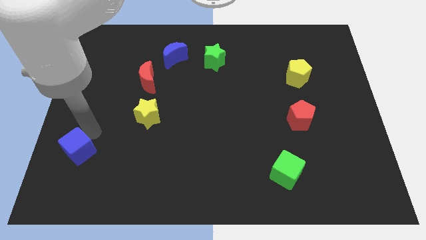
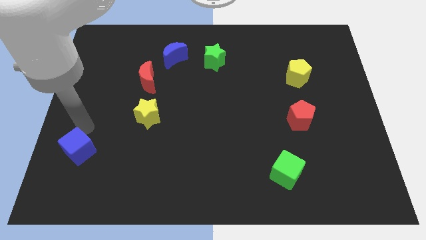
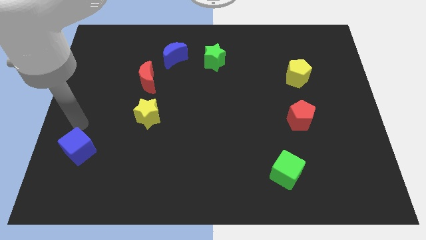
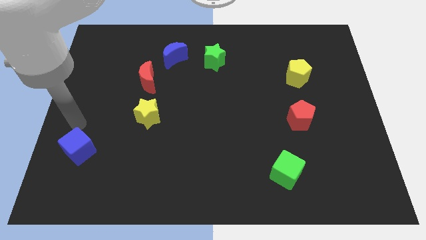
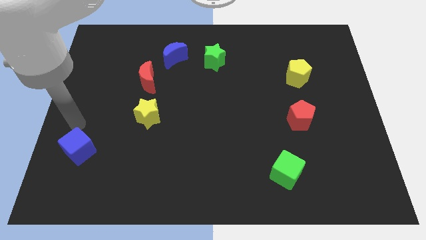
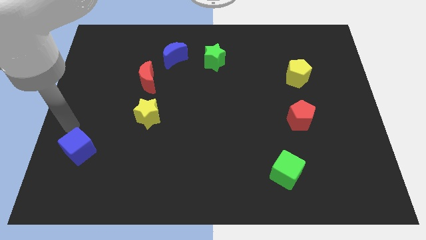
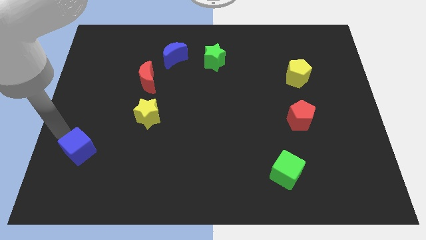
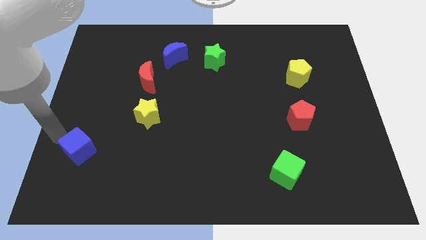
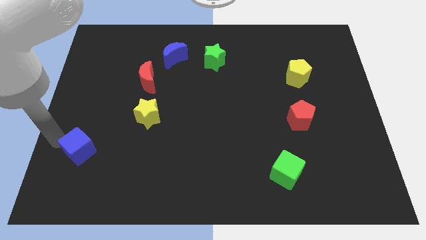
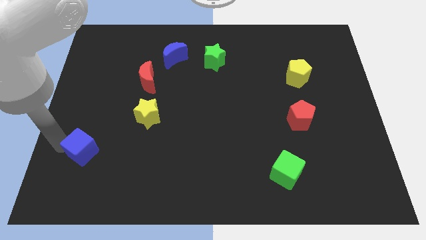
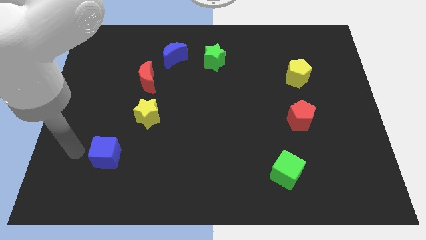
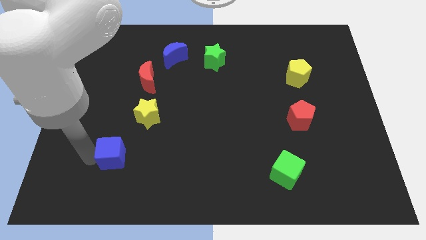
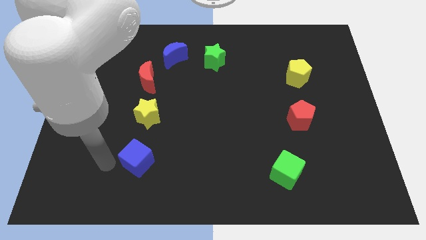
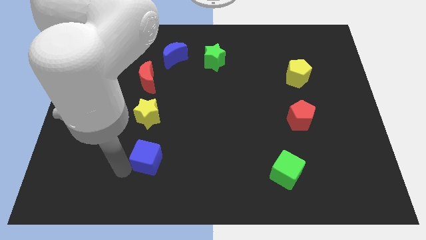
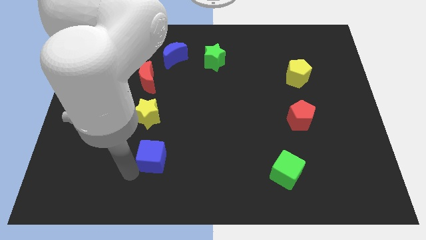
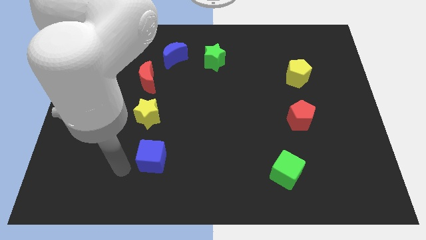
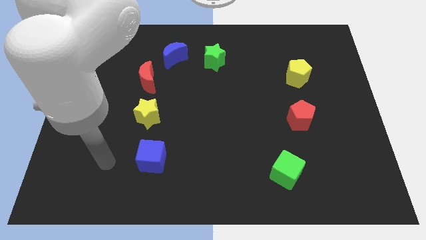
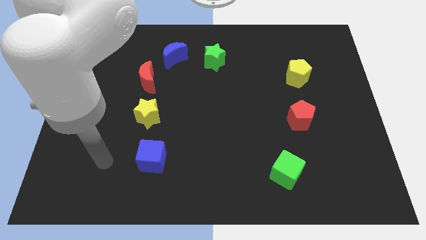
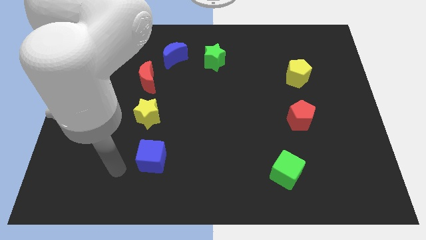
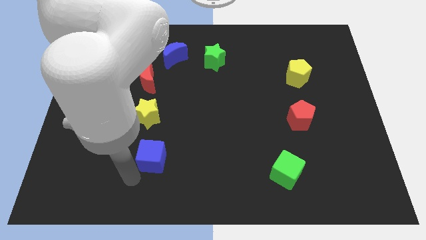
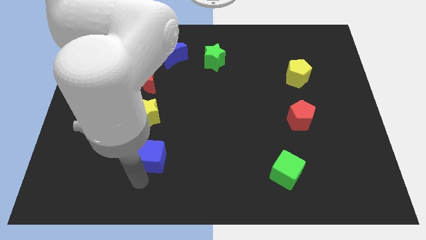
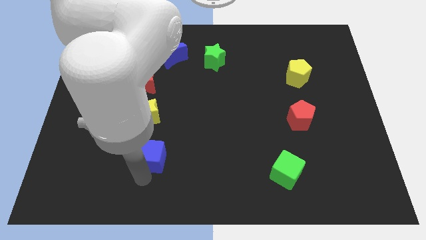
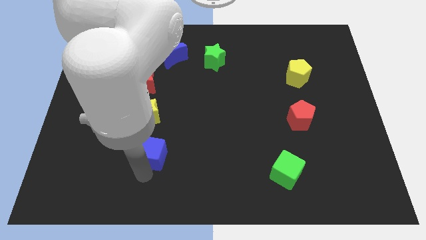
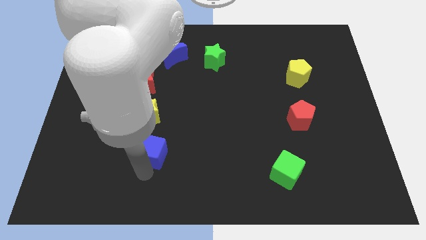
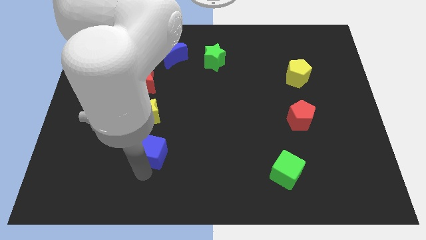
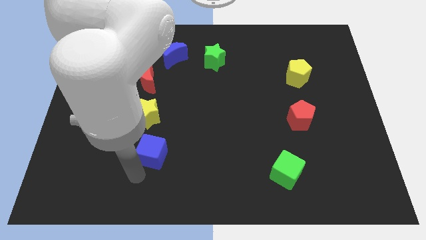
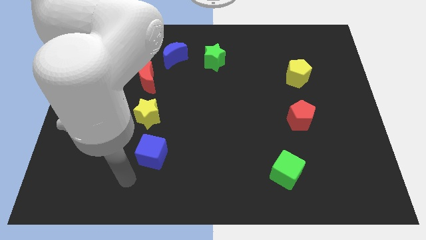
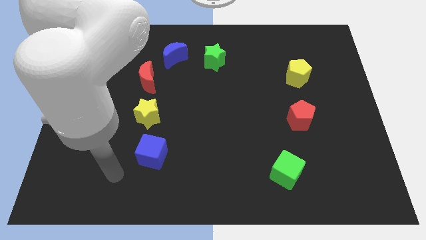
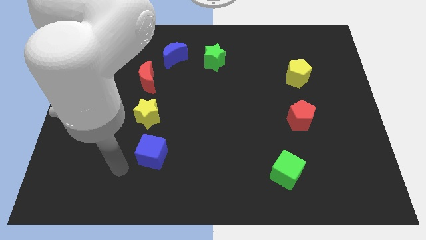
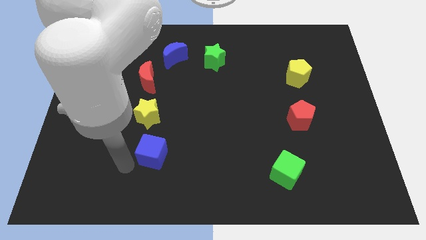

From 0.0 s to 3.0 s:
move the blue cube below the yellow star

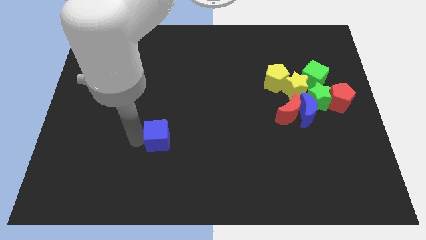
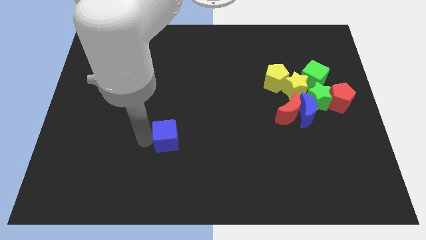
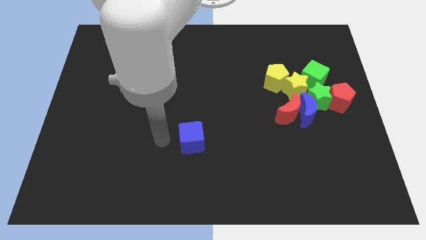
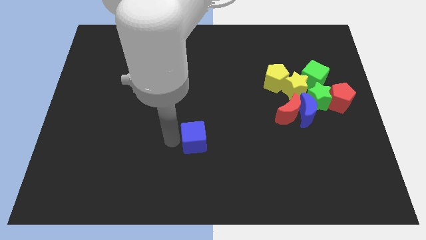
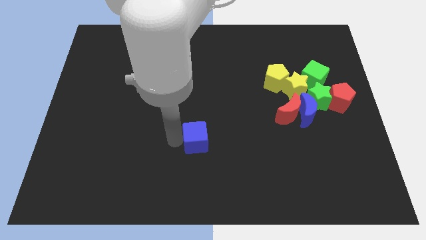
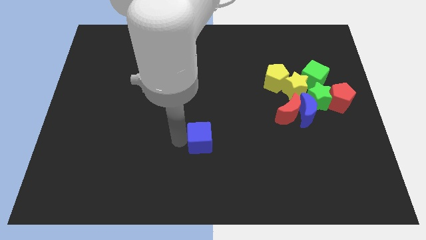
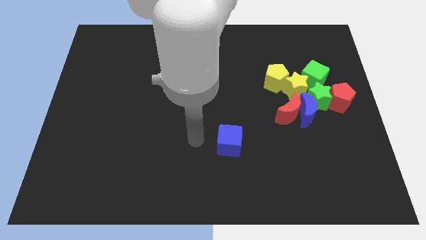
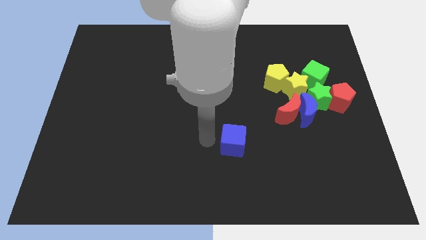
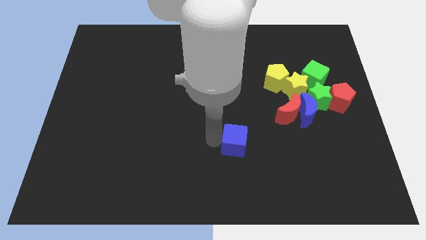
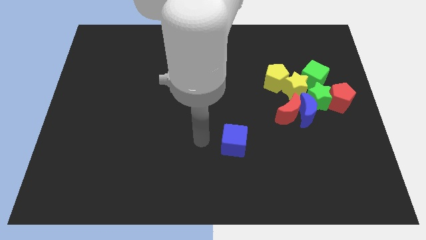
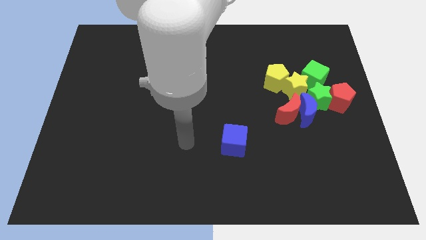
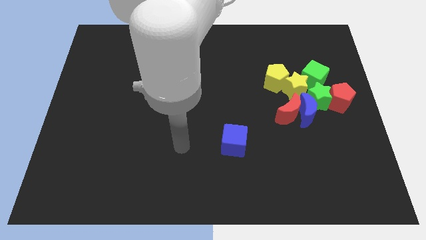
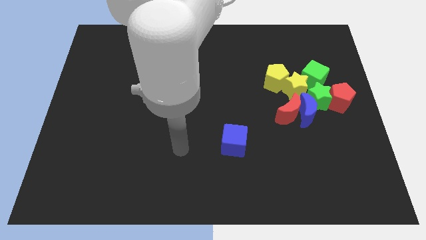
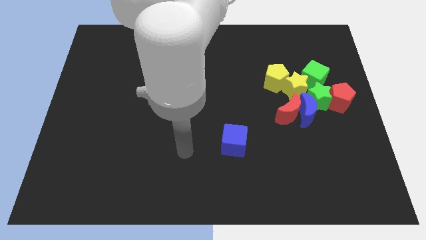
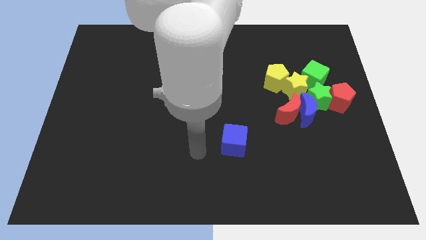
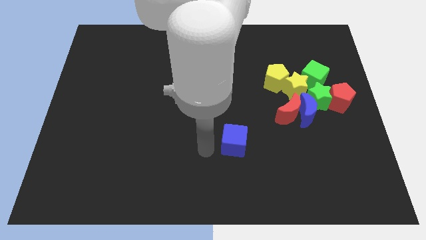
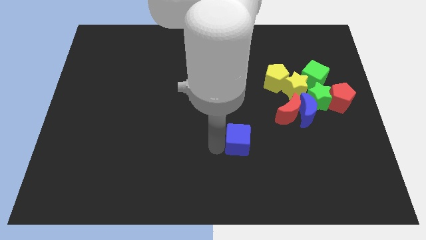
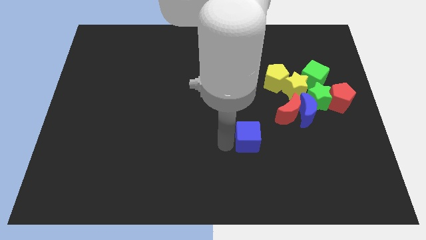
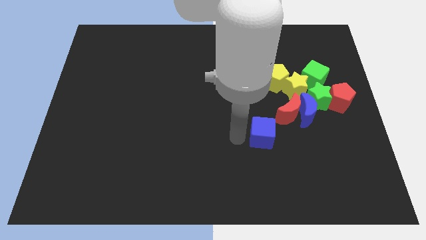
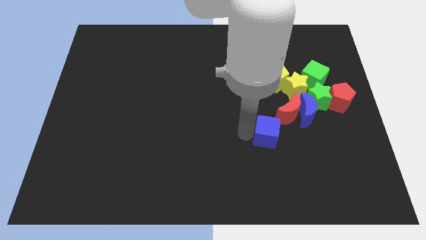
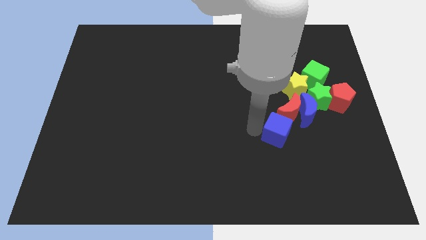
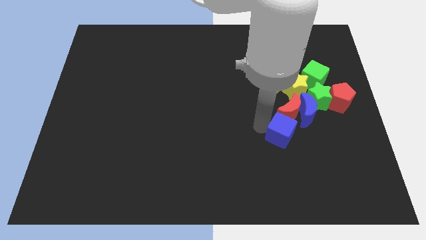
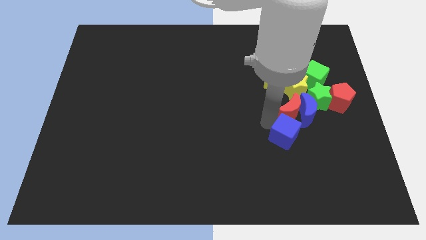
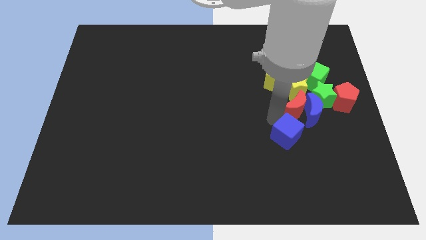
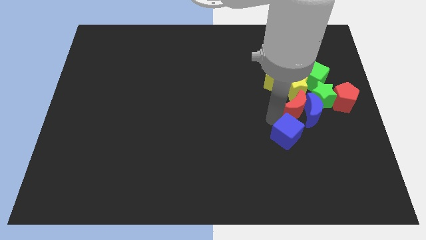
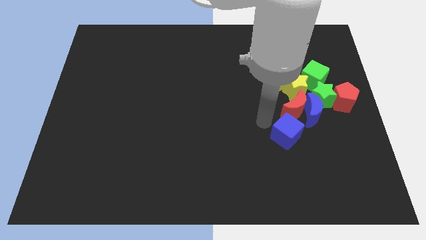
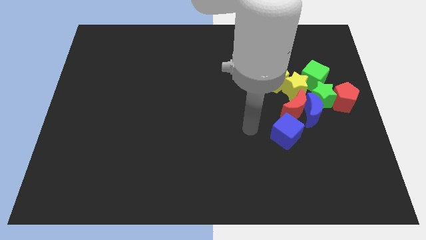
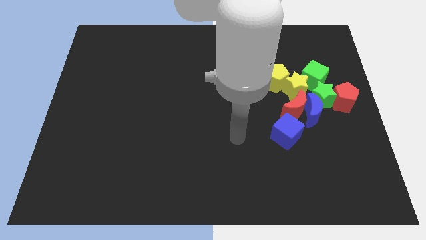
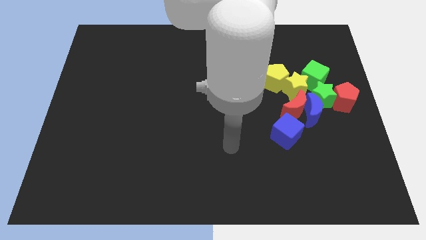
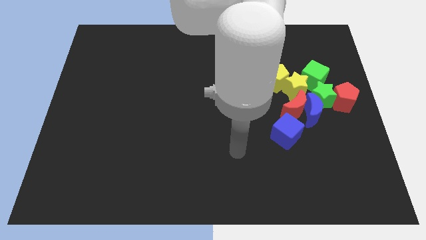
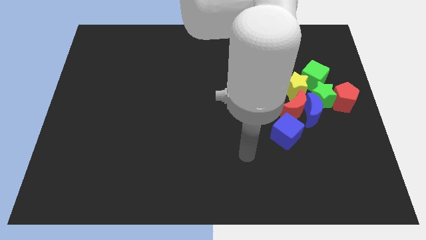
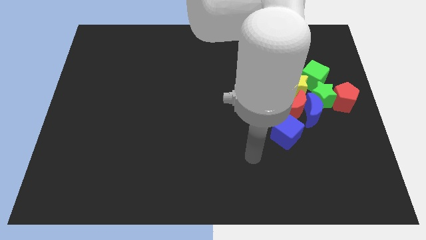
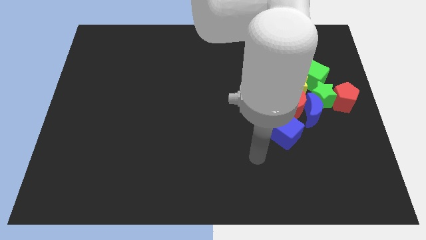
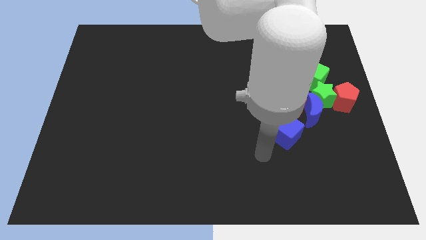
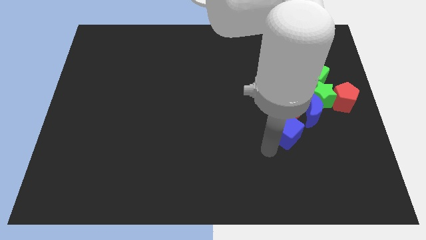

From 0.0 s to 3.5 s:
move the blue cube below the red moon

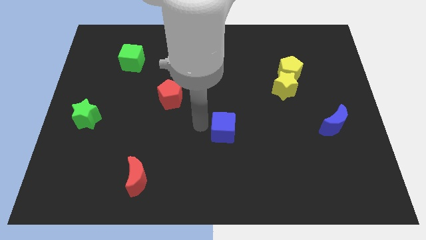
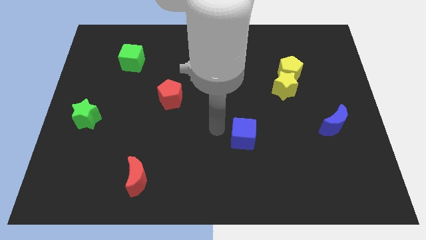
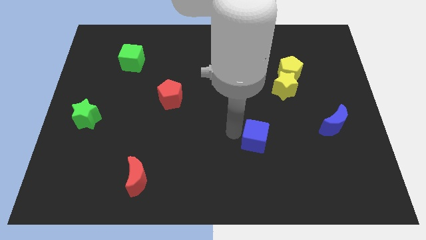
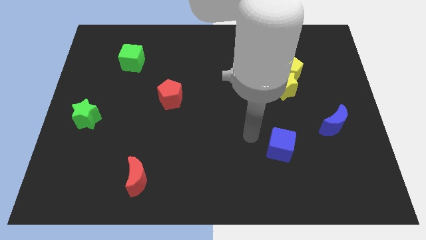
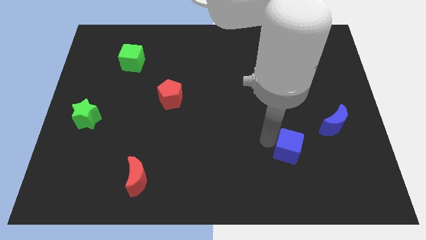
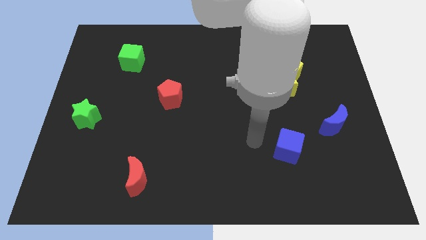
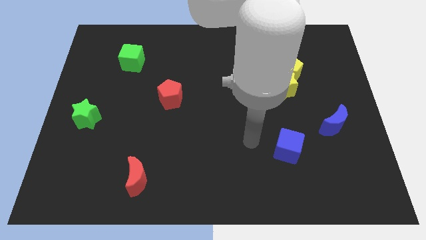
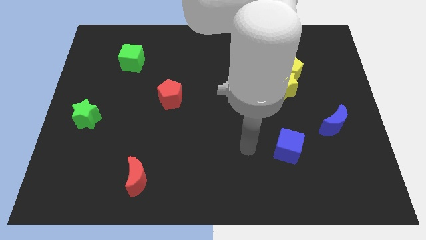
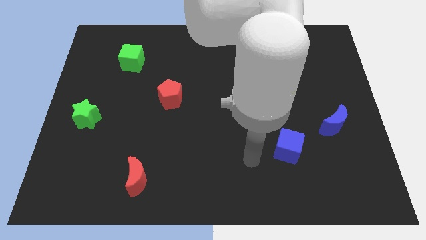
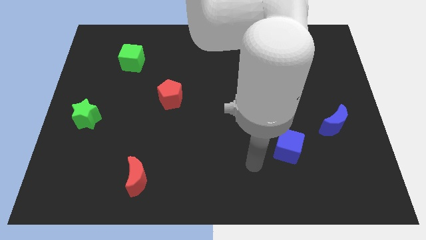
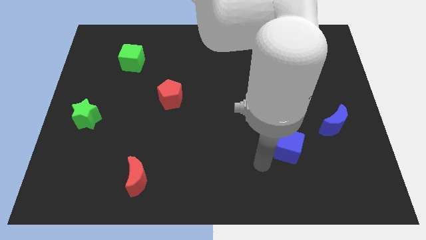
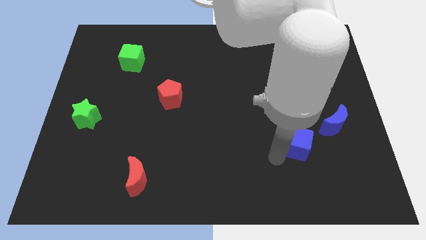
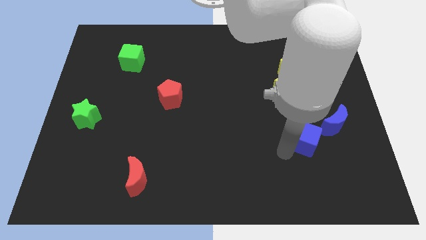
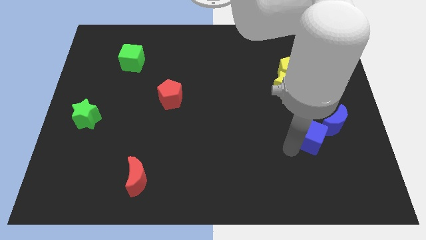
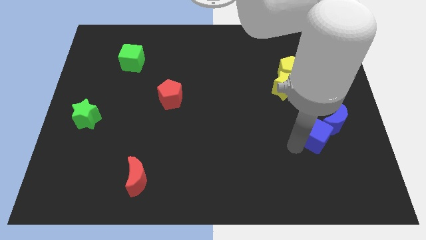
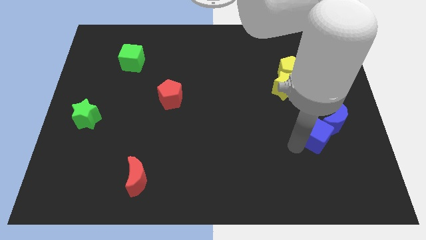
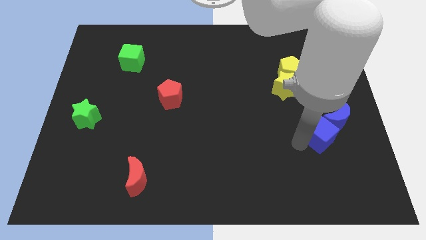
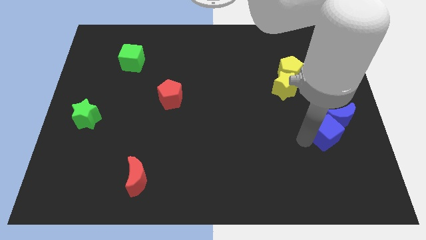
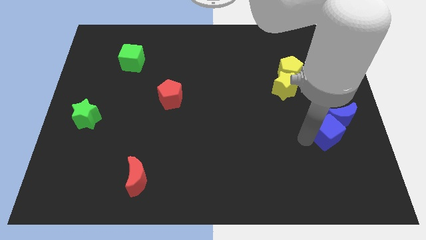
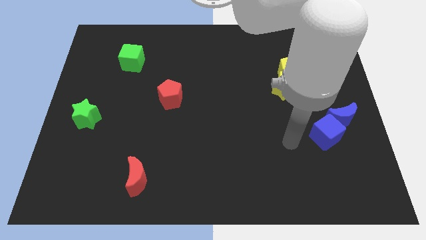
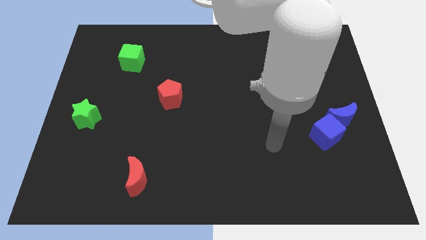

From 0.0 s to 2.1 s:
push the blue cube into the blue moon

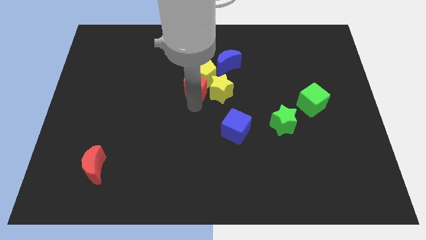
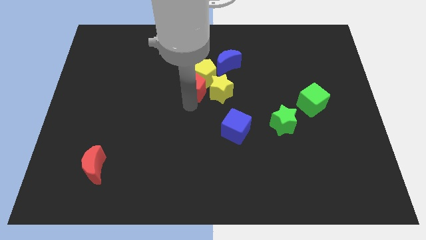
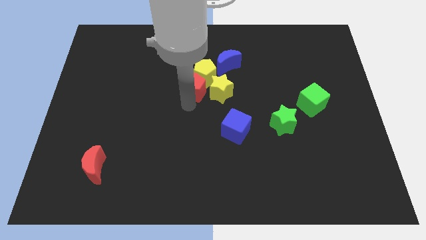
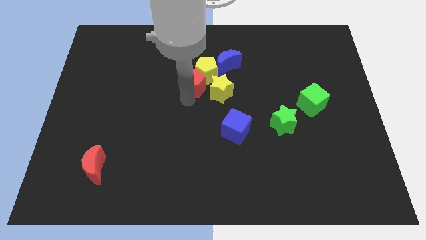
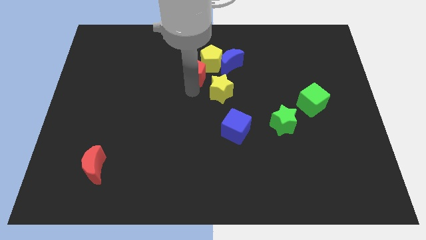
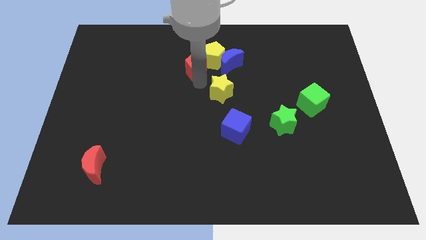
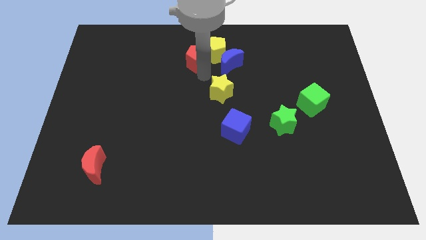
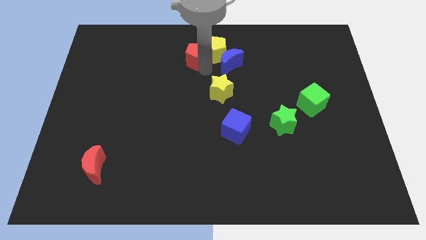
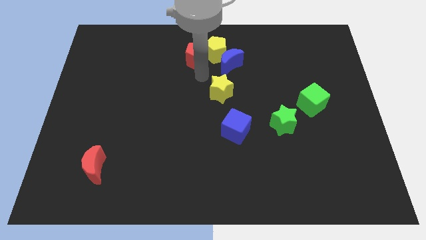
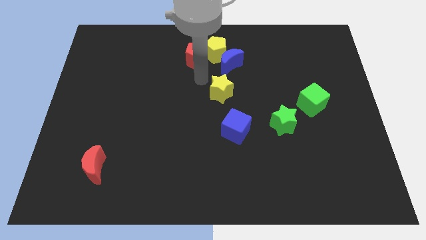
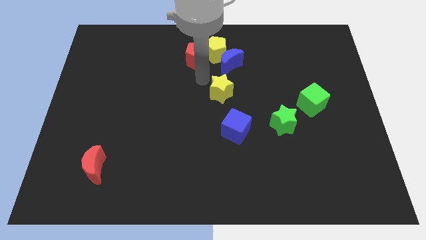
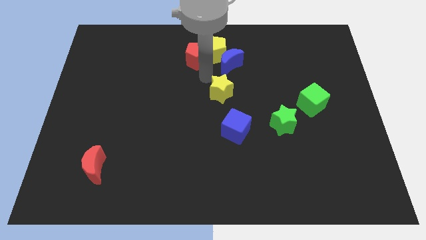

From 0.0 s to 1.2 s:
push the red pentagon towards upward
